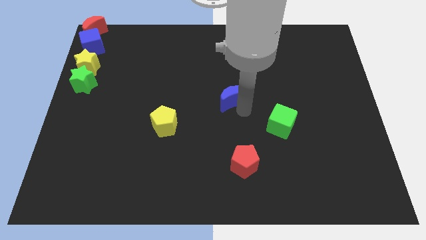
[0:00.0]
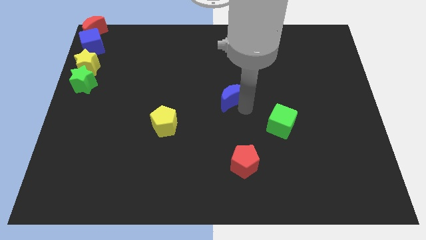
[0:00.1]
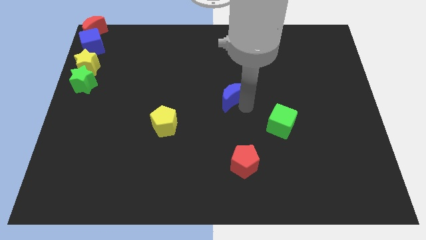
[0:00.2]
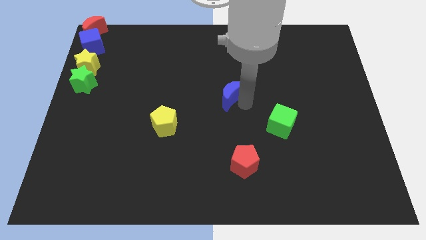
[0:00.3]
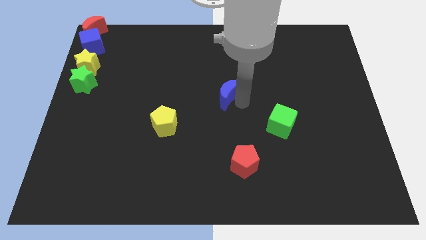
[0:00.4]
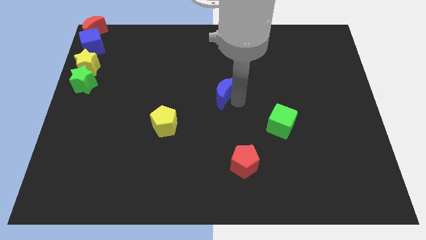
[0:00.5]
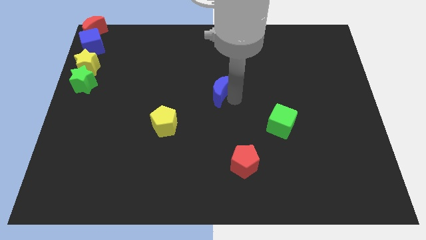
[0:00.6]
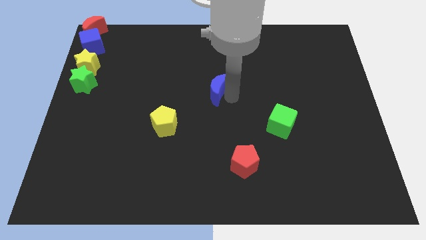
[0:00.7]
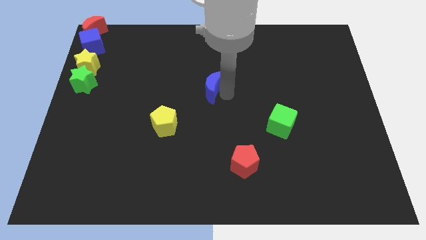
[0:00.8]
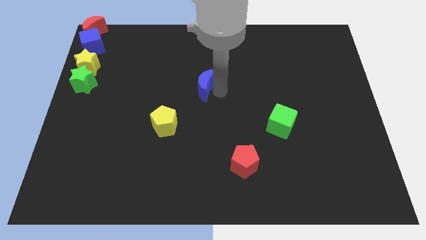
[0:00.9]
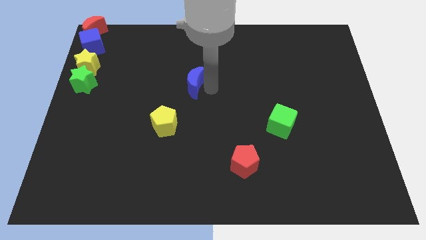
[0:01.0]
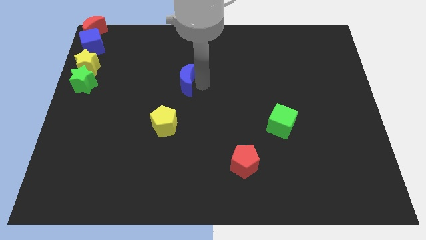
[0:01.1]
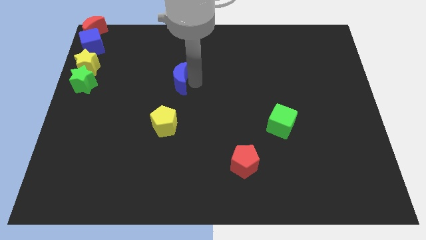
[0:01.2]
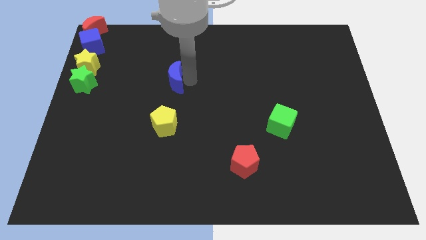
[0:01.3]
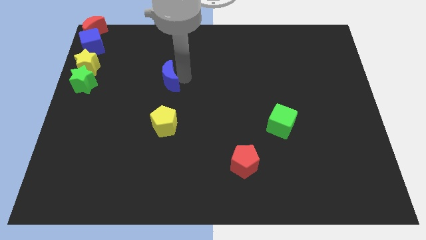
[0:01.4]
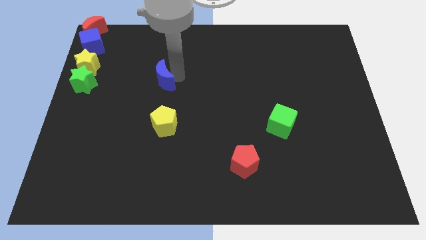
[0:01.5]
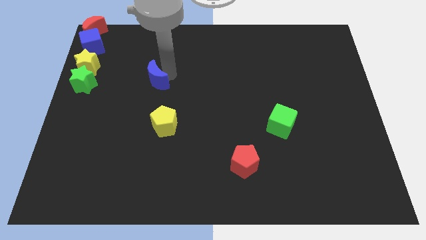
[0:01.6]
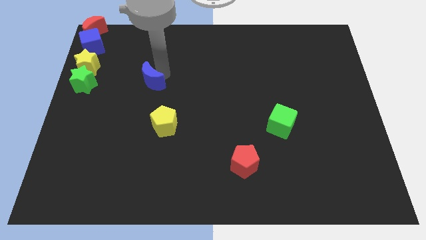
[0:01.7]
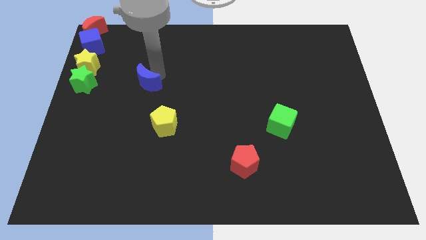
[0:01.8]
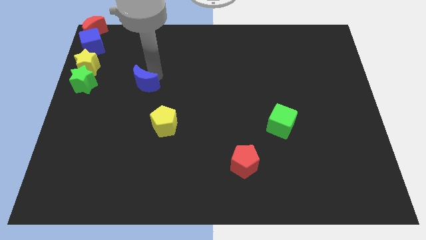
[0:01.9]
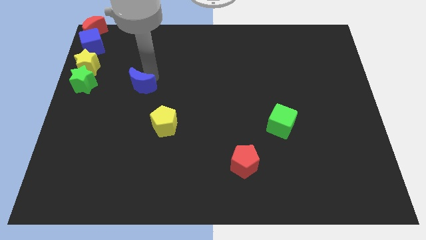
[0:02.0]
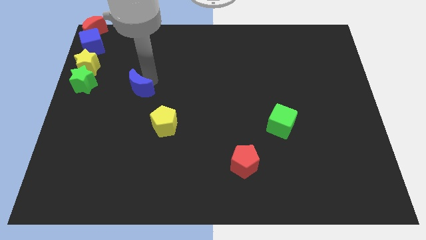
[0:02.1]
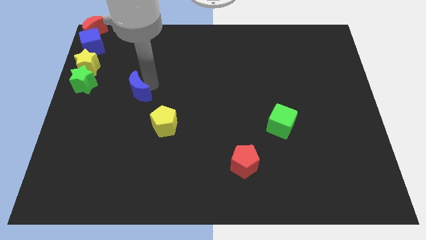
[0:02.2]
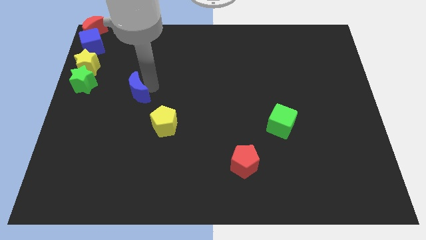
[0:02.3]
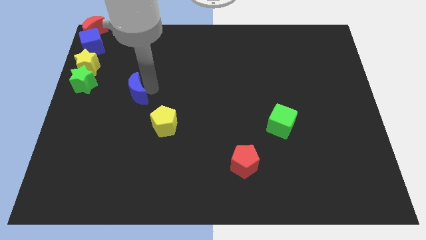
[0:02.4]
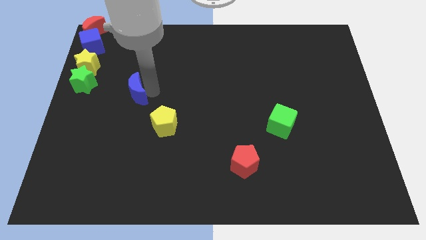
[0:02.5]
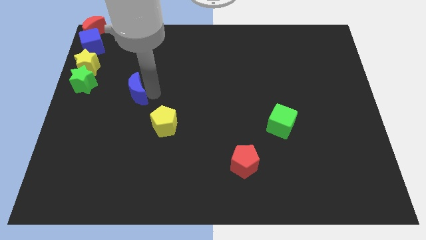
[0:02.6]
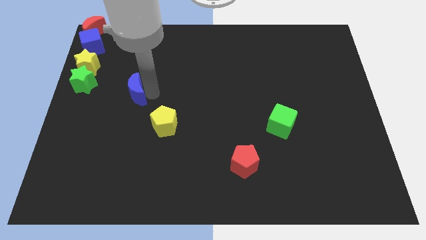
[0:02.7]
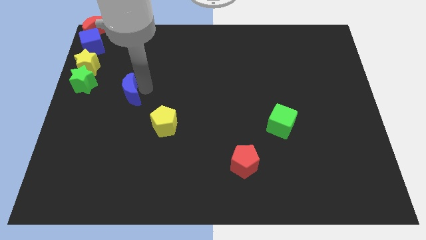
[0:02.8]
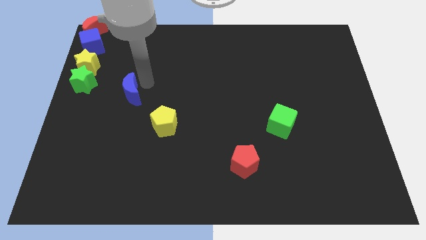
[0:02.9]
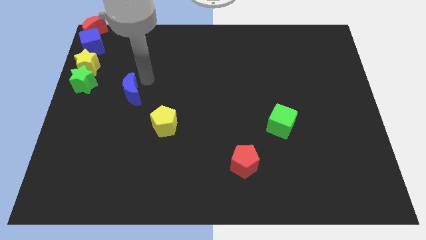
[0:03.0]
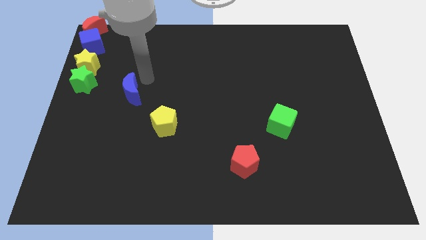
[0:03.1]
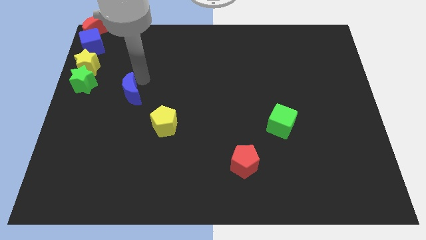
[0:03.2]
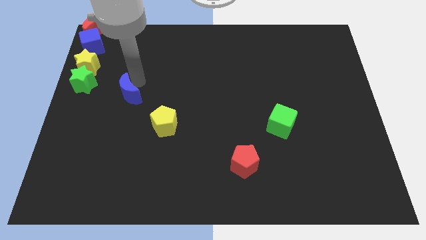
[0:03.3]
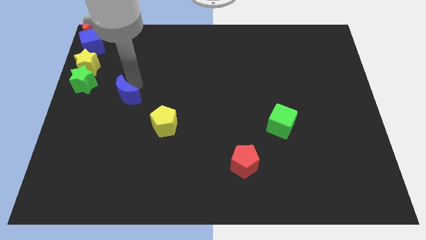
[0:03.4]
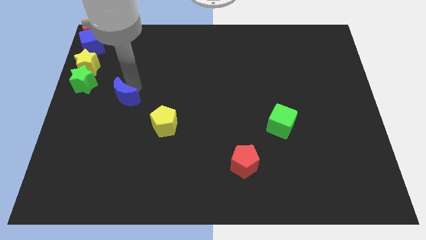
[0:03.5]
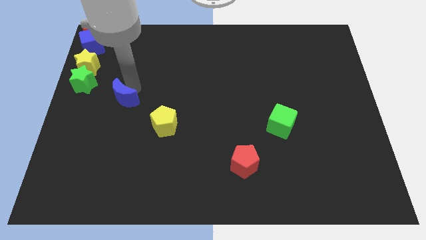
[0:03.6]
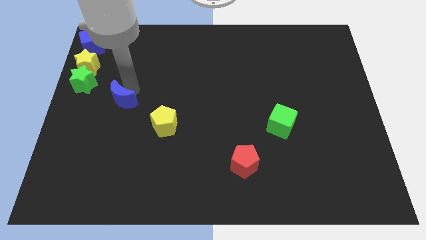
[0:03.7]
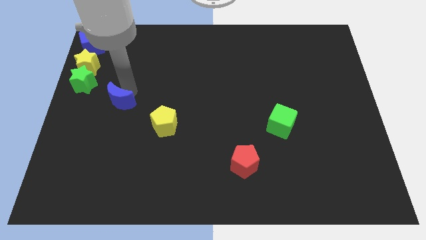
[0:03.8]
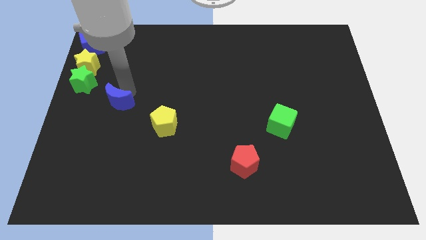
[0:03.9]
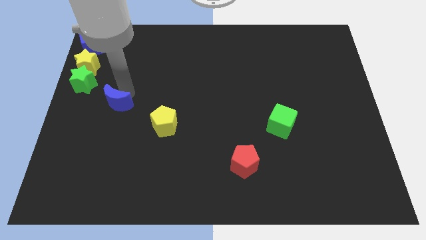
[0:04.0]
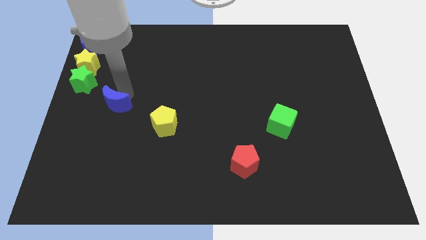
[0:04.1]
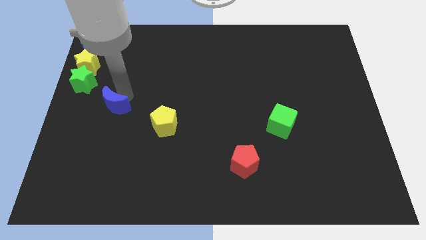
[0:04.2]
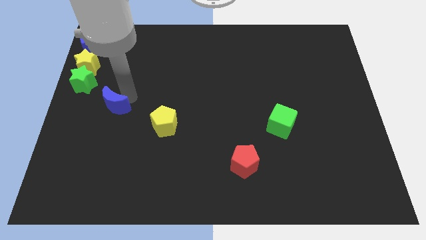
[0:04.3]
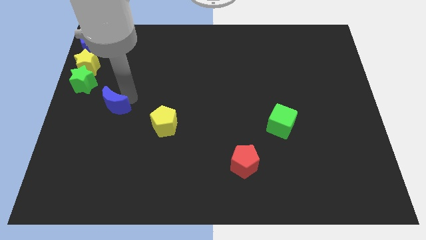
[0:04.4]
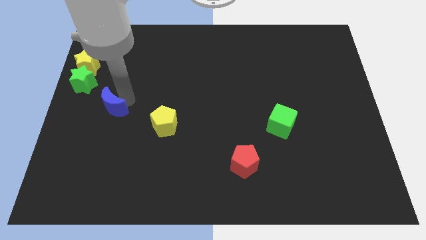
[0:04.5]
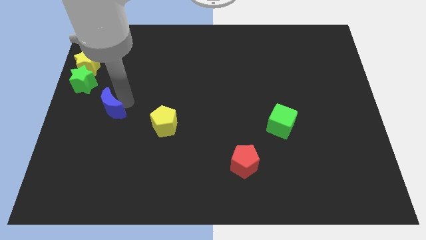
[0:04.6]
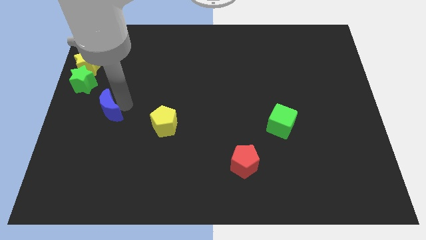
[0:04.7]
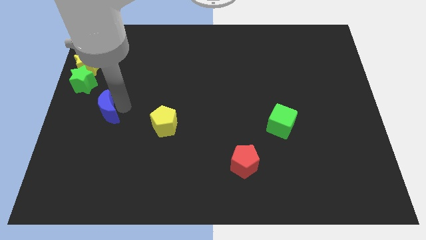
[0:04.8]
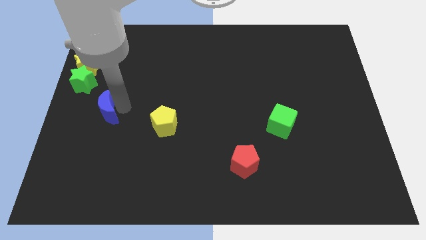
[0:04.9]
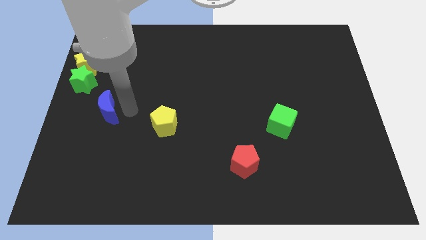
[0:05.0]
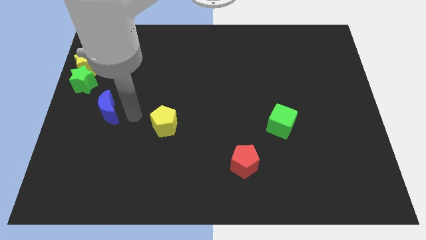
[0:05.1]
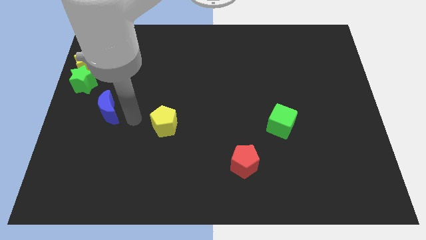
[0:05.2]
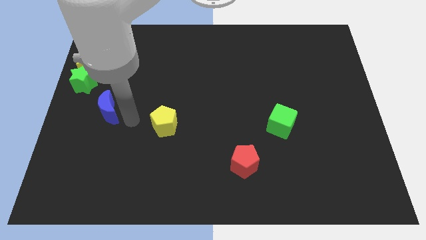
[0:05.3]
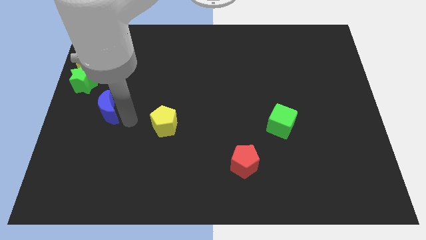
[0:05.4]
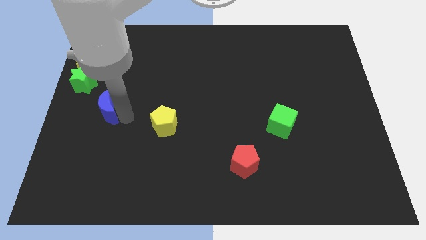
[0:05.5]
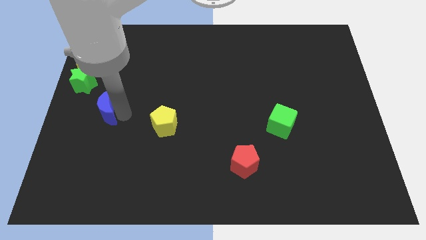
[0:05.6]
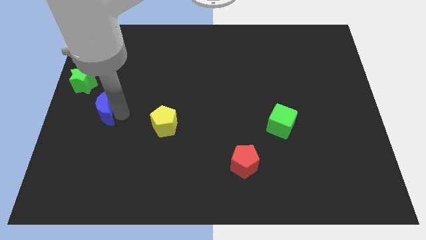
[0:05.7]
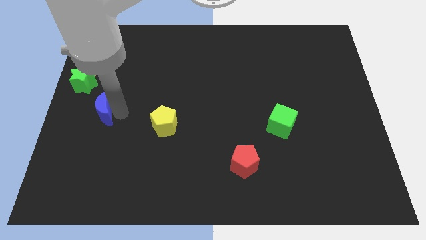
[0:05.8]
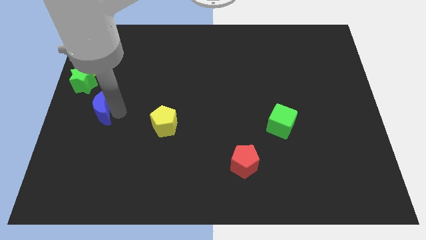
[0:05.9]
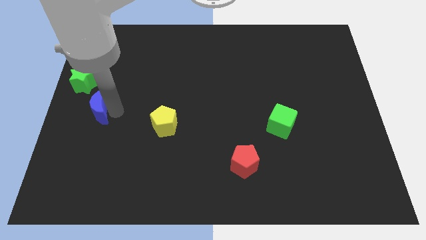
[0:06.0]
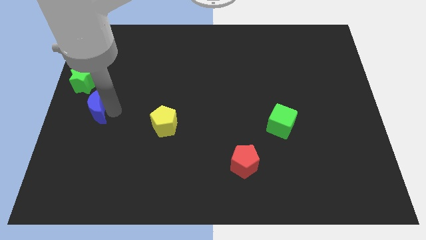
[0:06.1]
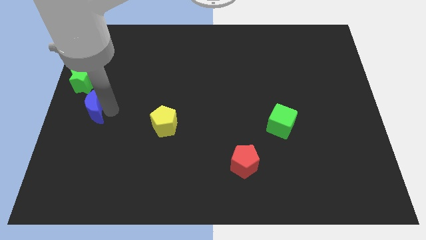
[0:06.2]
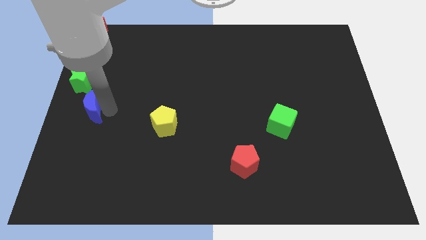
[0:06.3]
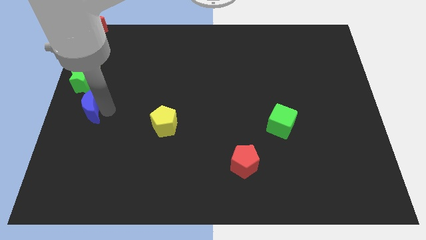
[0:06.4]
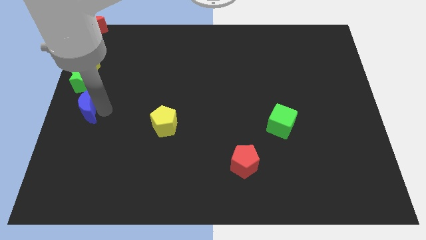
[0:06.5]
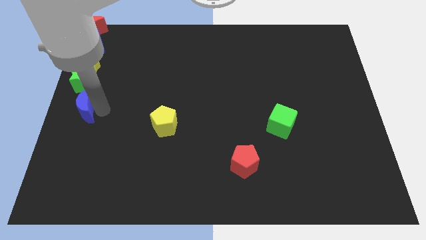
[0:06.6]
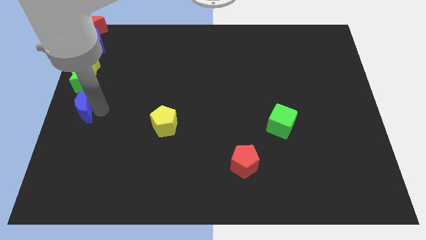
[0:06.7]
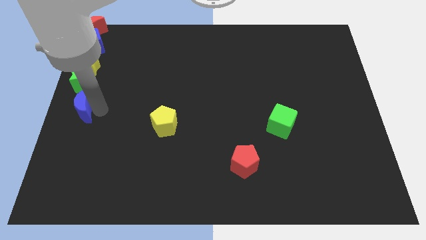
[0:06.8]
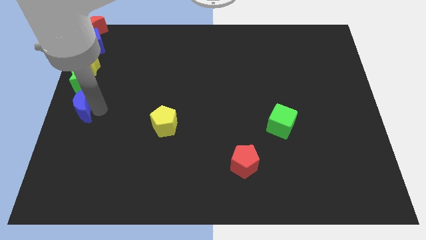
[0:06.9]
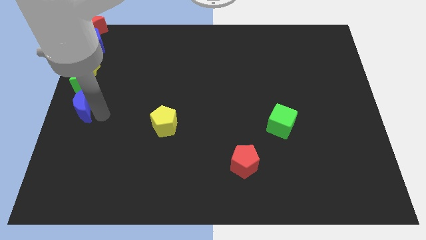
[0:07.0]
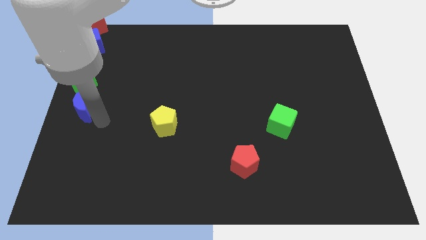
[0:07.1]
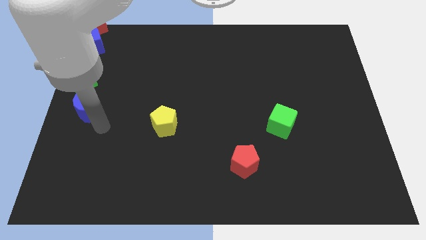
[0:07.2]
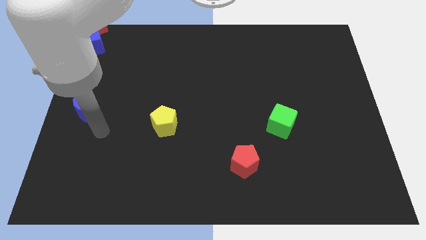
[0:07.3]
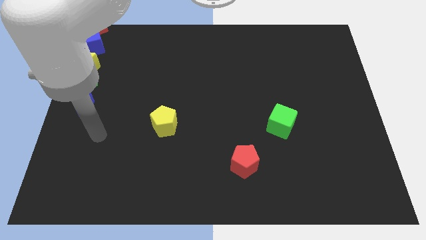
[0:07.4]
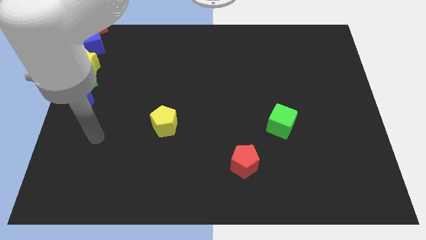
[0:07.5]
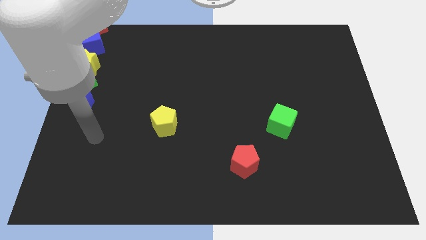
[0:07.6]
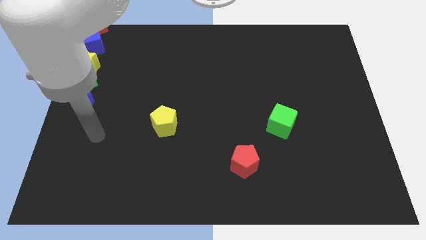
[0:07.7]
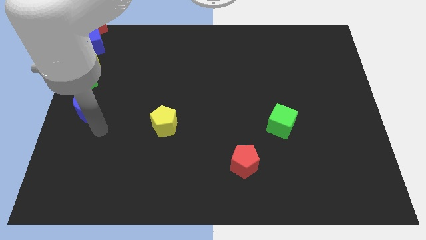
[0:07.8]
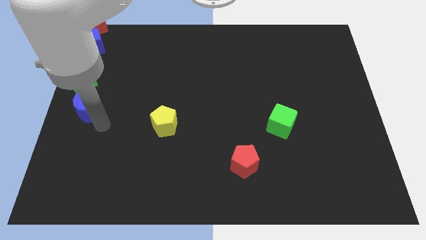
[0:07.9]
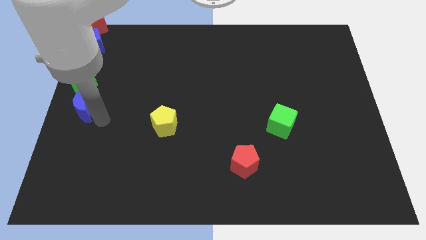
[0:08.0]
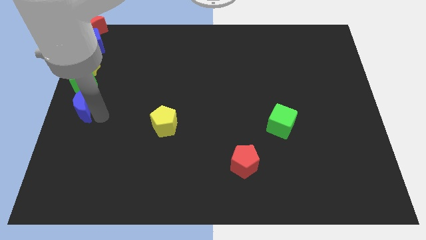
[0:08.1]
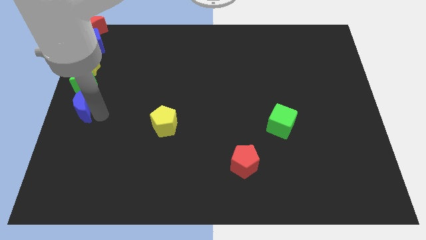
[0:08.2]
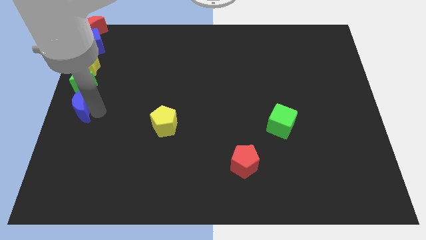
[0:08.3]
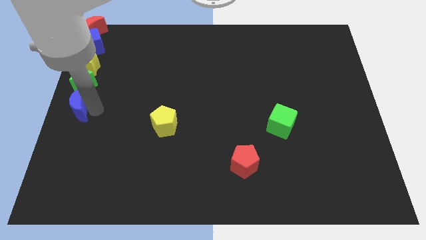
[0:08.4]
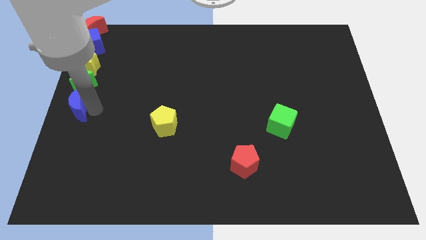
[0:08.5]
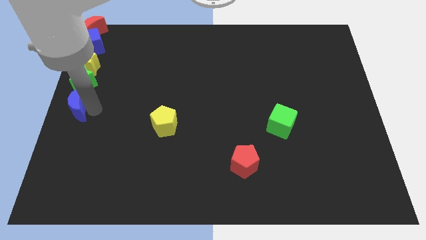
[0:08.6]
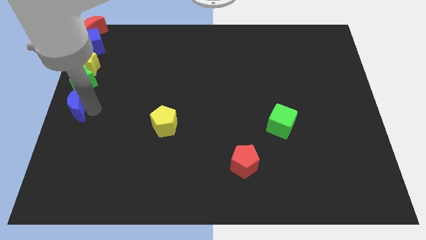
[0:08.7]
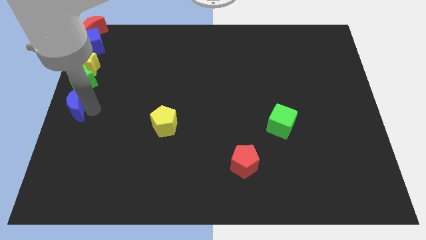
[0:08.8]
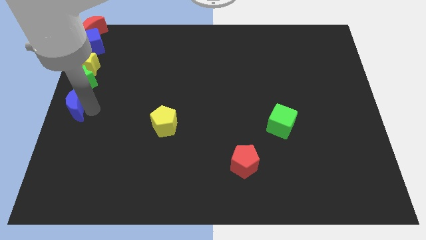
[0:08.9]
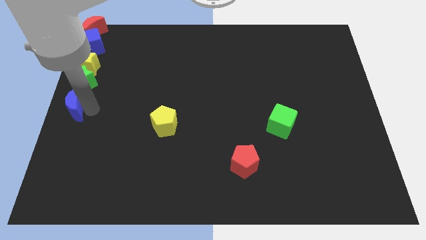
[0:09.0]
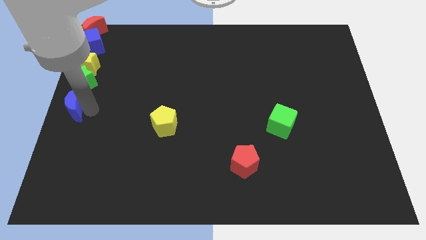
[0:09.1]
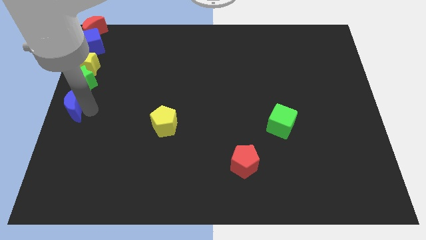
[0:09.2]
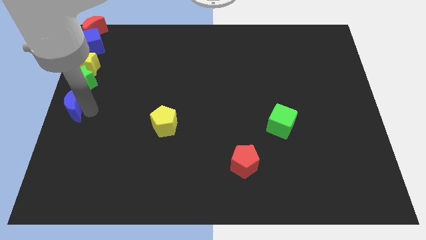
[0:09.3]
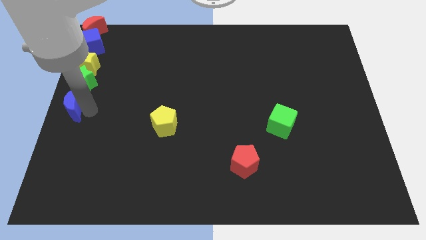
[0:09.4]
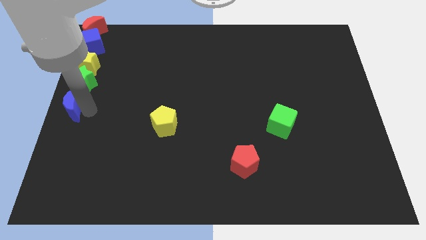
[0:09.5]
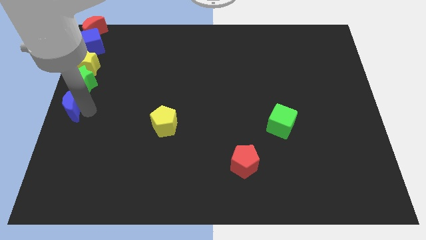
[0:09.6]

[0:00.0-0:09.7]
push the blue crescent to the bottom of the green star in a row
